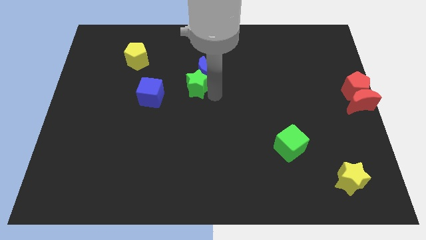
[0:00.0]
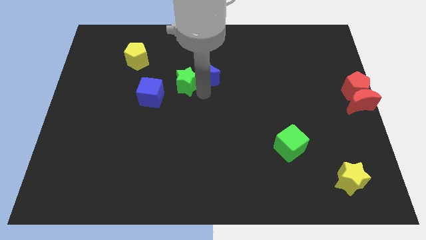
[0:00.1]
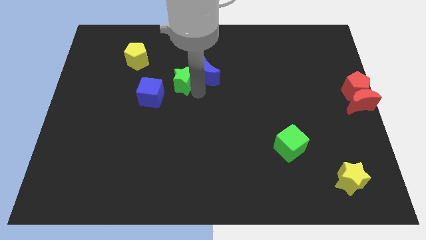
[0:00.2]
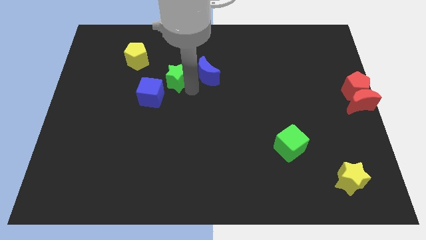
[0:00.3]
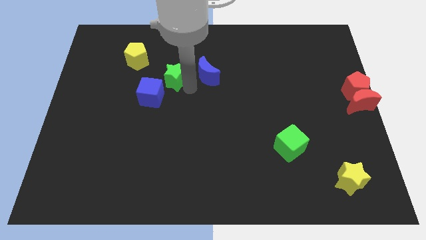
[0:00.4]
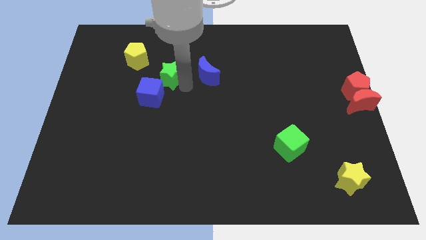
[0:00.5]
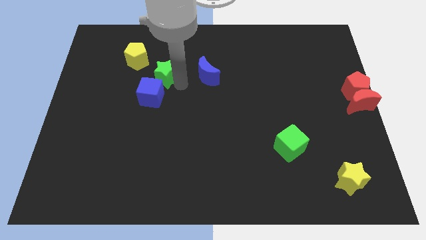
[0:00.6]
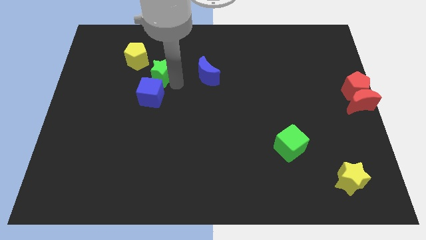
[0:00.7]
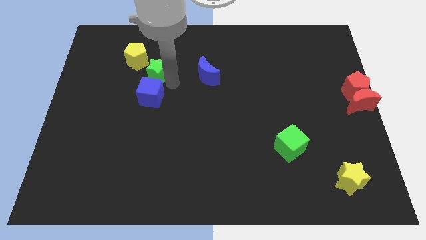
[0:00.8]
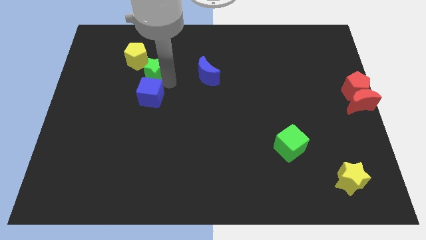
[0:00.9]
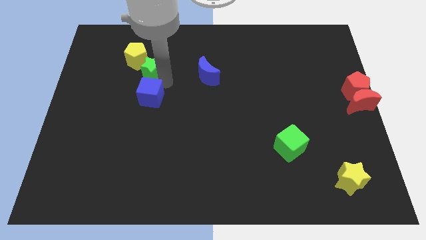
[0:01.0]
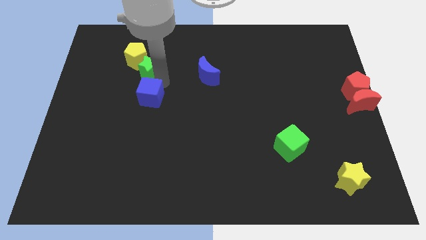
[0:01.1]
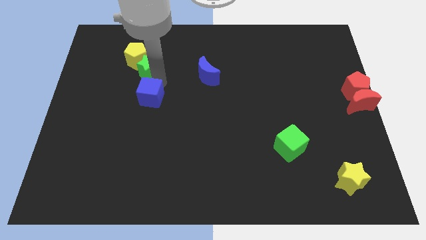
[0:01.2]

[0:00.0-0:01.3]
move the green star close to the yellow pentagon

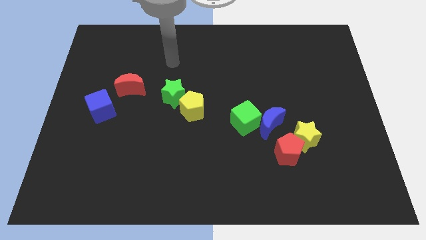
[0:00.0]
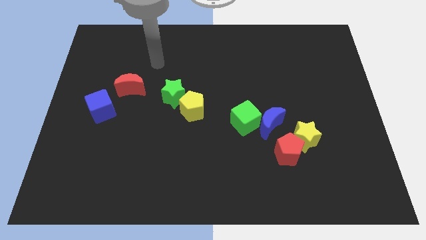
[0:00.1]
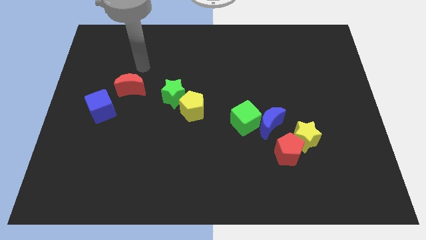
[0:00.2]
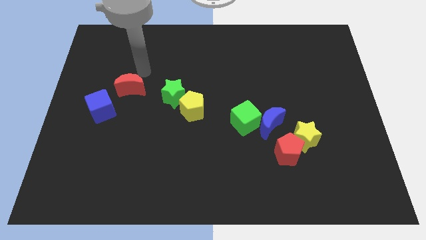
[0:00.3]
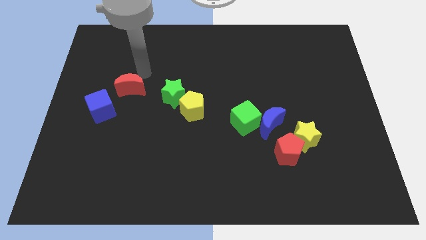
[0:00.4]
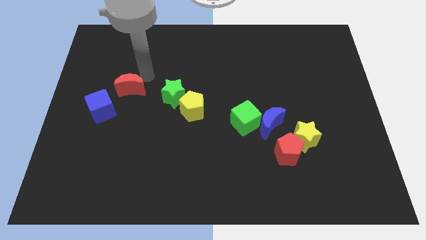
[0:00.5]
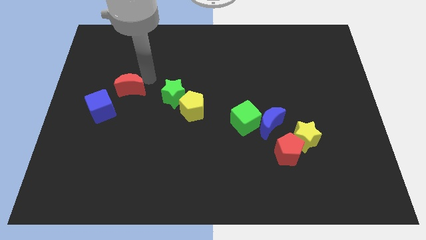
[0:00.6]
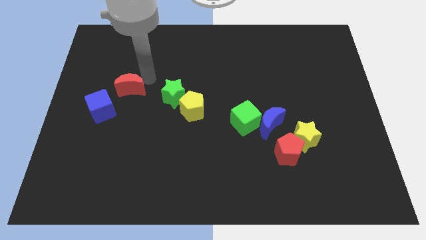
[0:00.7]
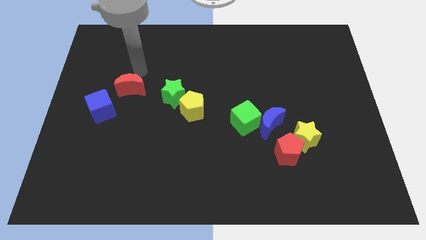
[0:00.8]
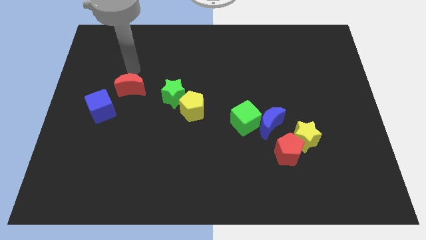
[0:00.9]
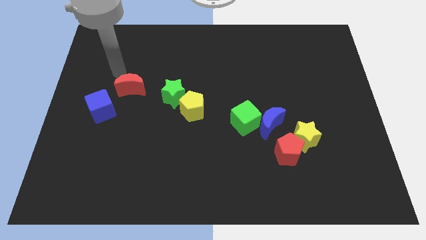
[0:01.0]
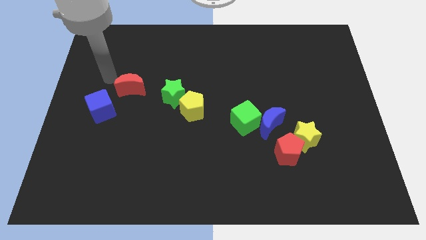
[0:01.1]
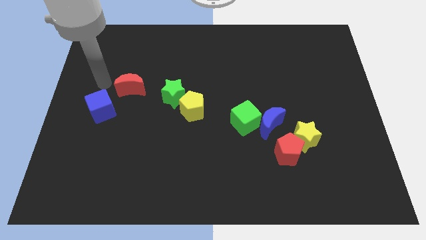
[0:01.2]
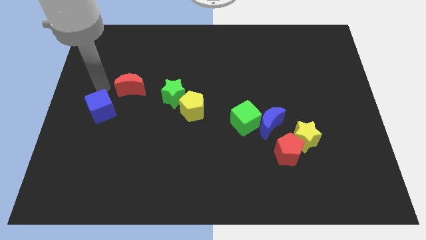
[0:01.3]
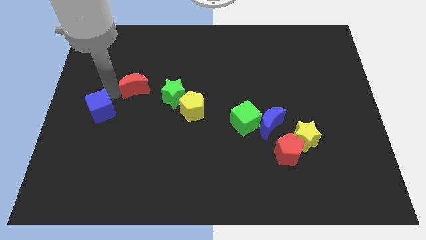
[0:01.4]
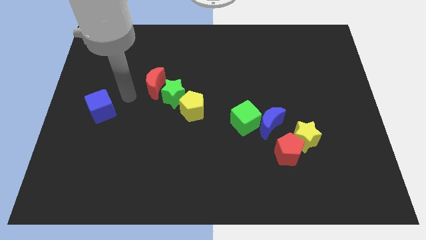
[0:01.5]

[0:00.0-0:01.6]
move the red moon towards the green star

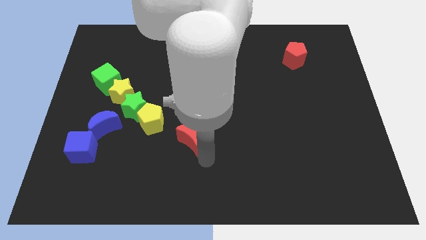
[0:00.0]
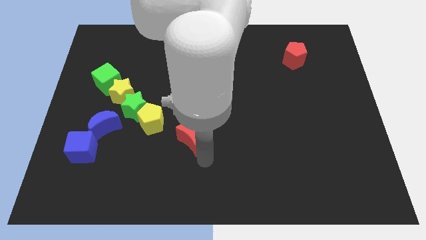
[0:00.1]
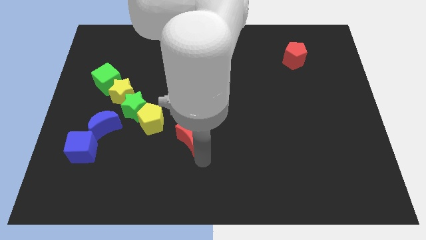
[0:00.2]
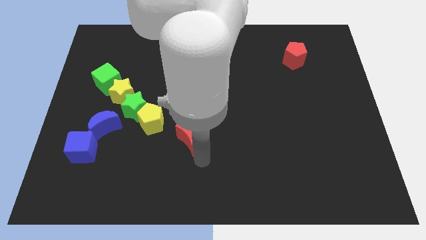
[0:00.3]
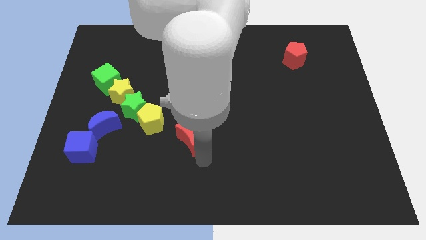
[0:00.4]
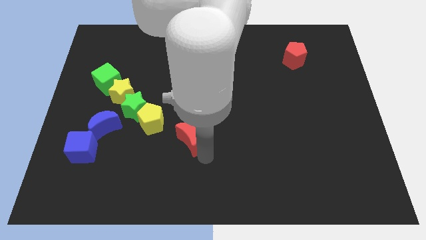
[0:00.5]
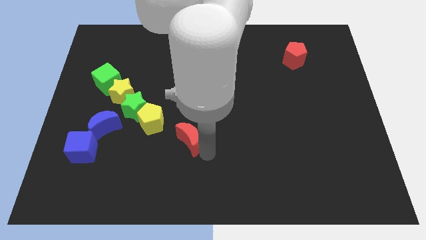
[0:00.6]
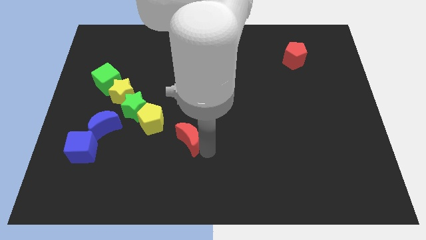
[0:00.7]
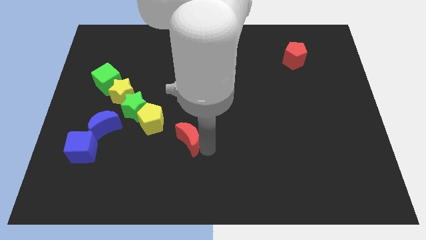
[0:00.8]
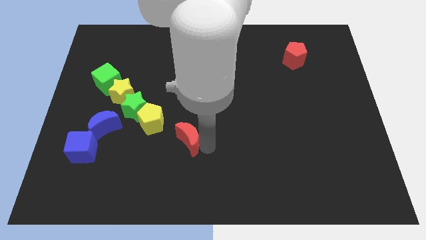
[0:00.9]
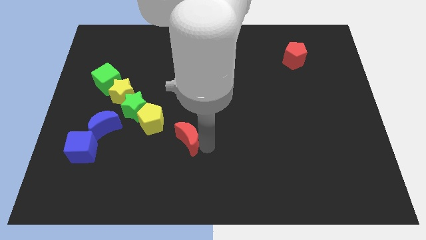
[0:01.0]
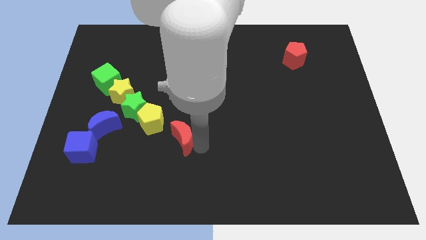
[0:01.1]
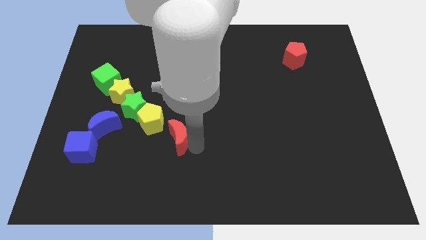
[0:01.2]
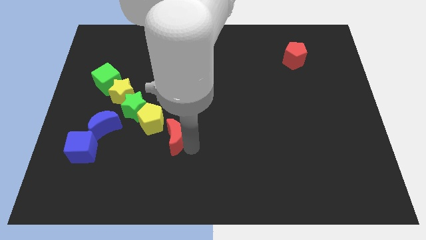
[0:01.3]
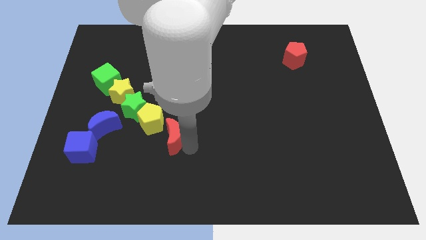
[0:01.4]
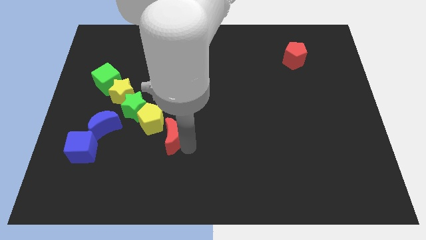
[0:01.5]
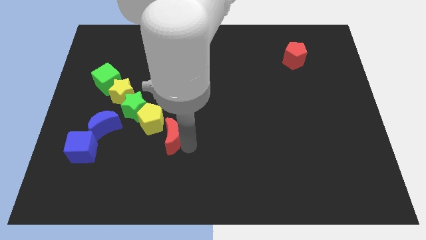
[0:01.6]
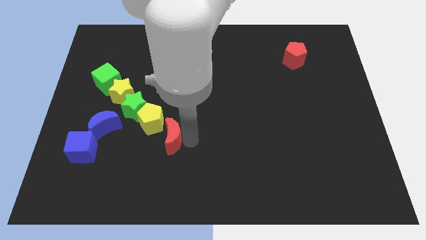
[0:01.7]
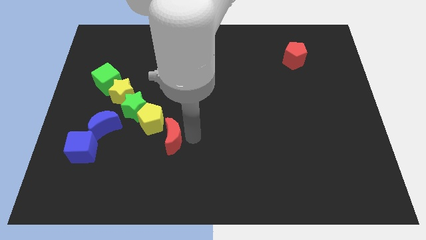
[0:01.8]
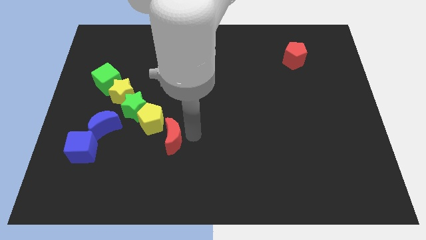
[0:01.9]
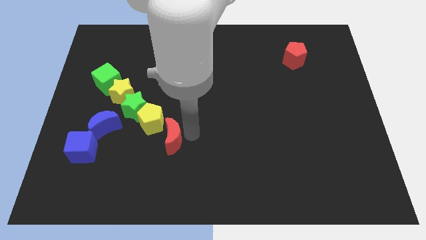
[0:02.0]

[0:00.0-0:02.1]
move red moon towards yellow pentagon

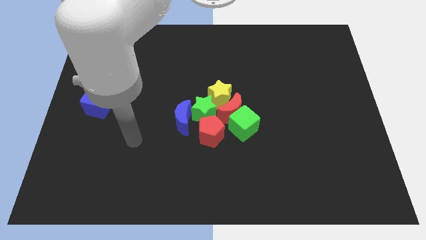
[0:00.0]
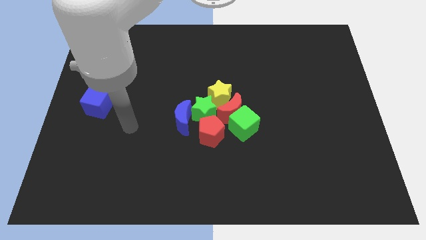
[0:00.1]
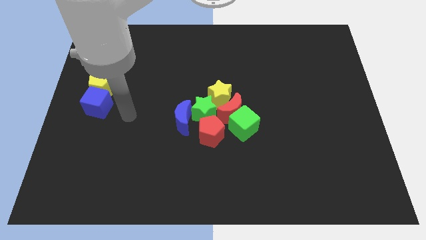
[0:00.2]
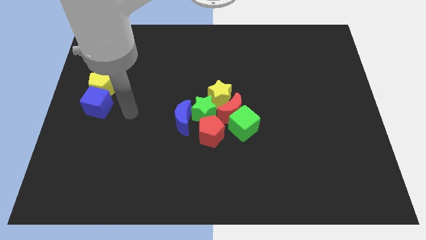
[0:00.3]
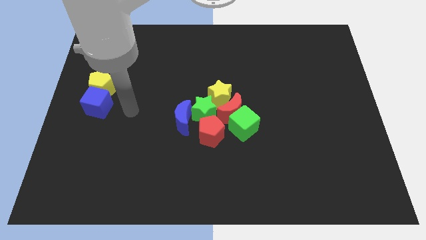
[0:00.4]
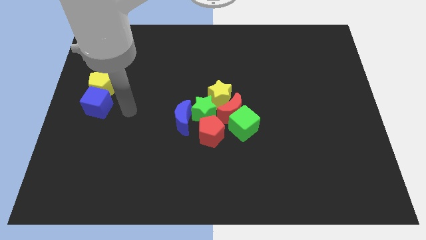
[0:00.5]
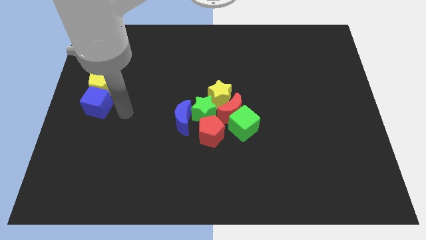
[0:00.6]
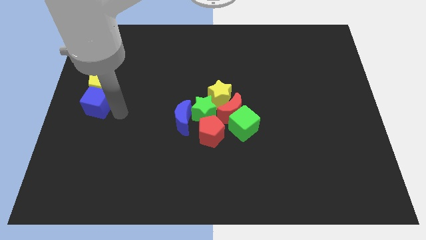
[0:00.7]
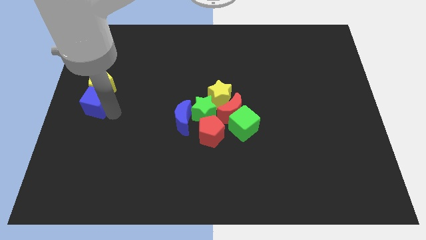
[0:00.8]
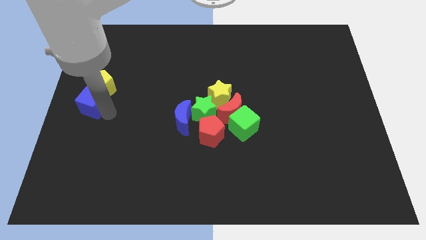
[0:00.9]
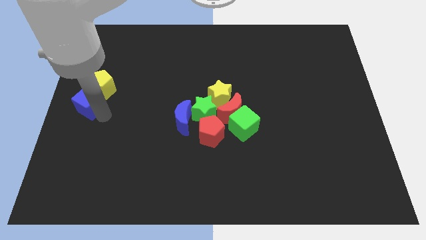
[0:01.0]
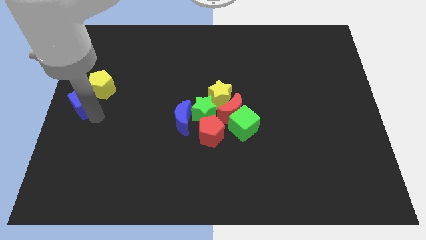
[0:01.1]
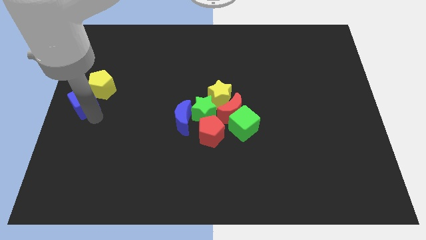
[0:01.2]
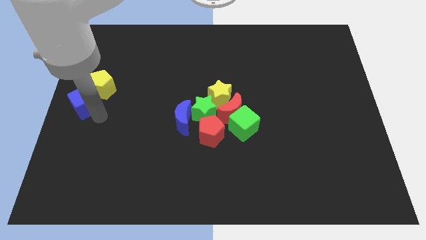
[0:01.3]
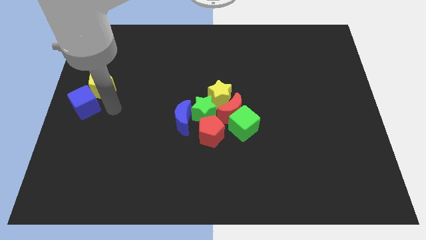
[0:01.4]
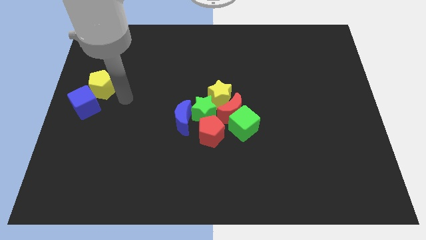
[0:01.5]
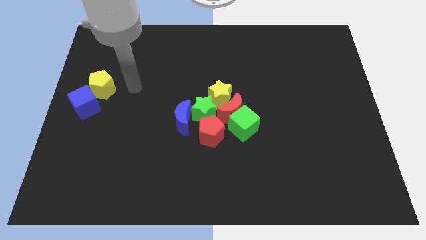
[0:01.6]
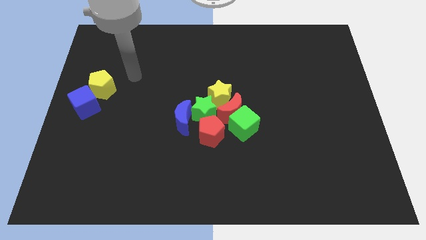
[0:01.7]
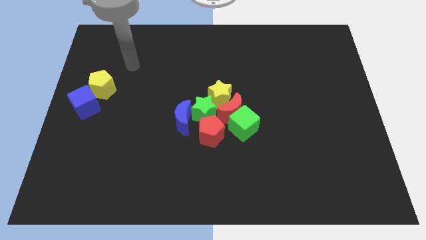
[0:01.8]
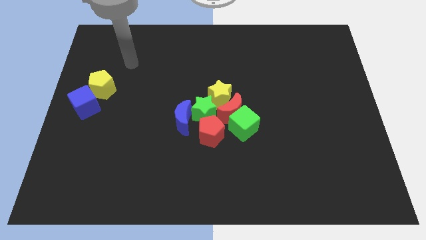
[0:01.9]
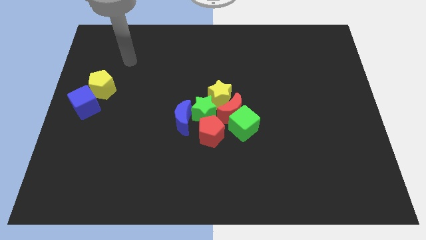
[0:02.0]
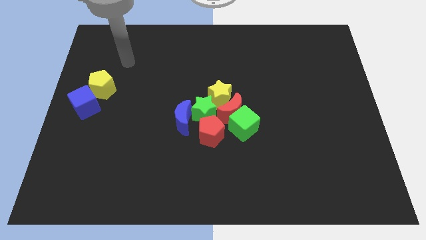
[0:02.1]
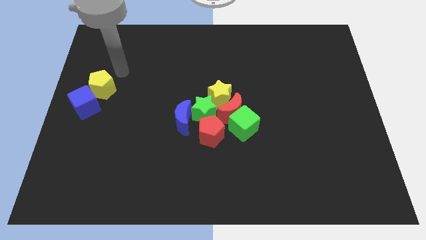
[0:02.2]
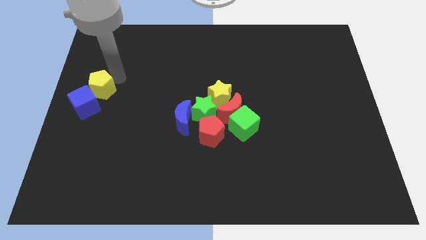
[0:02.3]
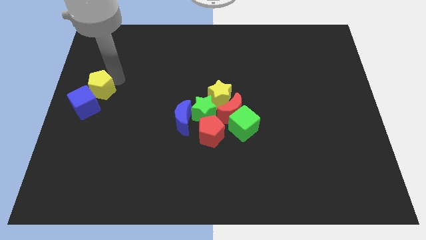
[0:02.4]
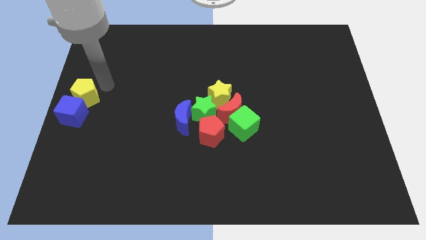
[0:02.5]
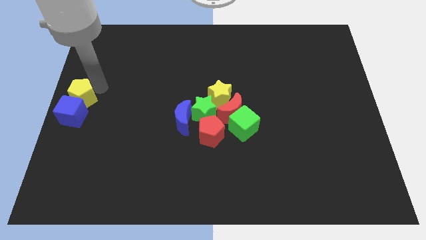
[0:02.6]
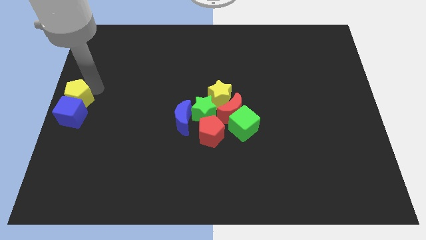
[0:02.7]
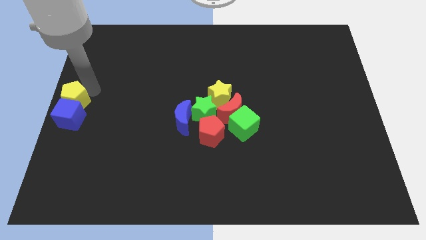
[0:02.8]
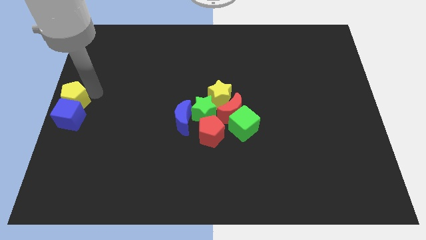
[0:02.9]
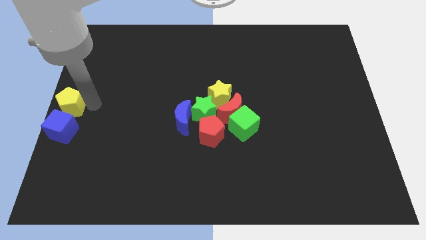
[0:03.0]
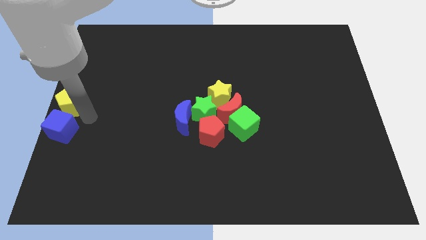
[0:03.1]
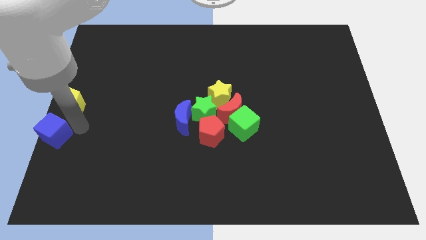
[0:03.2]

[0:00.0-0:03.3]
move the blue cube and the yellow pentagon to the left center of the board

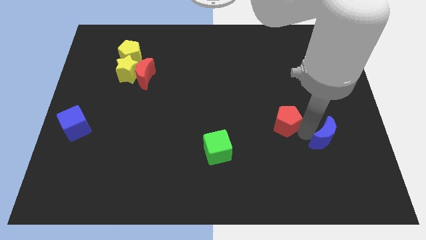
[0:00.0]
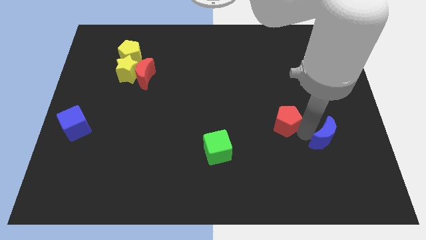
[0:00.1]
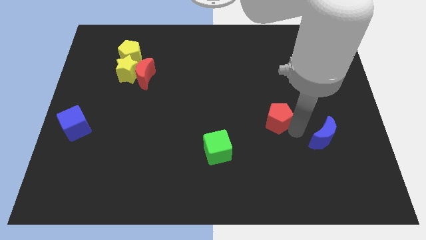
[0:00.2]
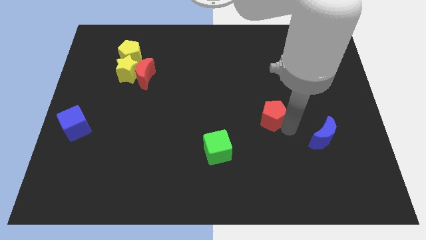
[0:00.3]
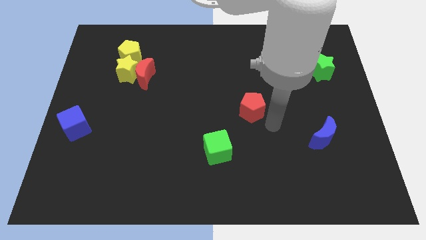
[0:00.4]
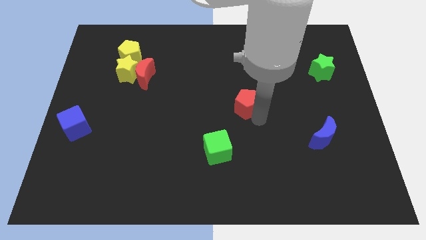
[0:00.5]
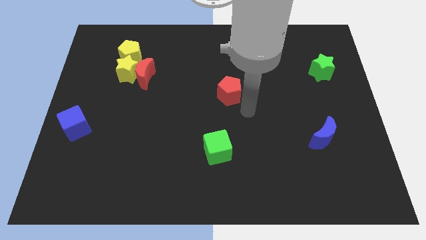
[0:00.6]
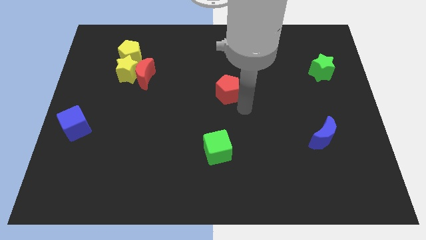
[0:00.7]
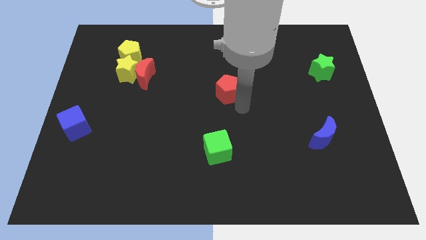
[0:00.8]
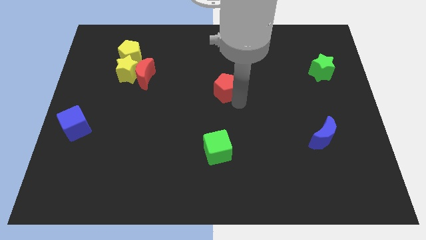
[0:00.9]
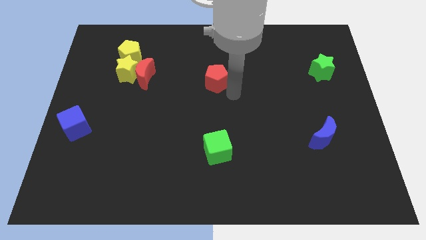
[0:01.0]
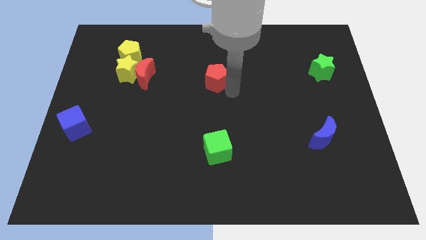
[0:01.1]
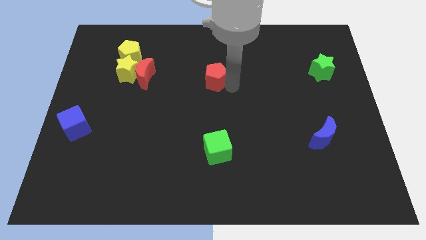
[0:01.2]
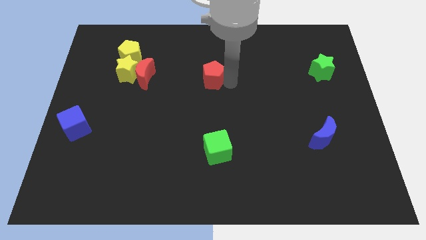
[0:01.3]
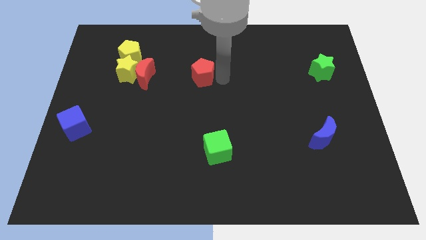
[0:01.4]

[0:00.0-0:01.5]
put the red pentagon vertically above the green cube
